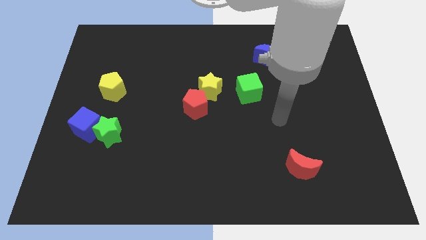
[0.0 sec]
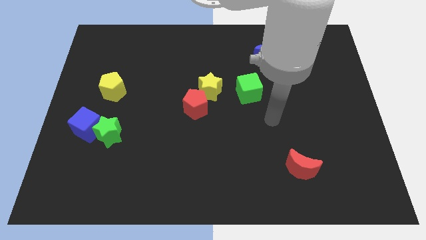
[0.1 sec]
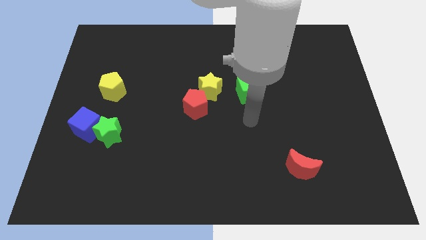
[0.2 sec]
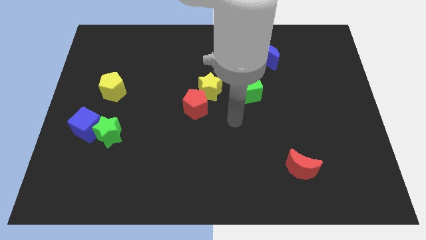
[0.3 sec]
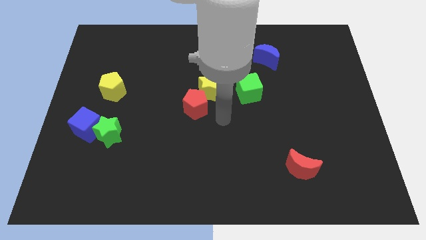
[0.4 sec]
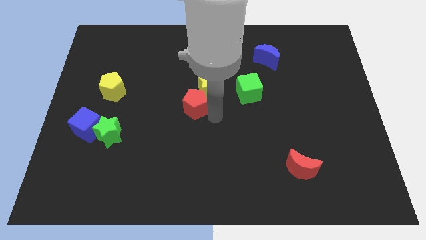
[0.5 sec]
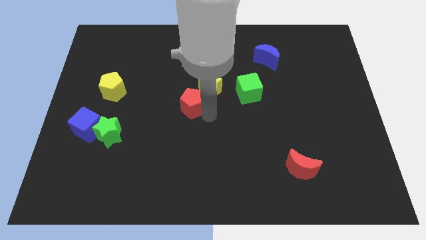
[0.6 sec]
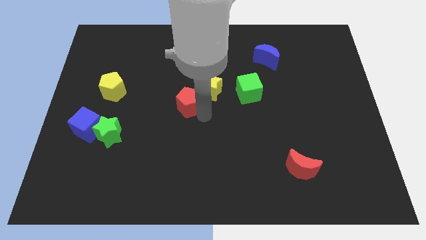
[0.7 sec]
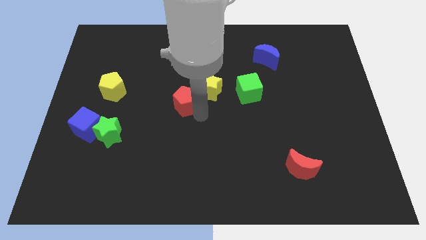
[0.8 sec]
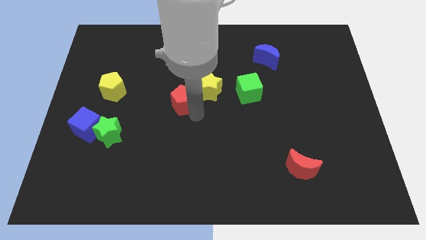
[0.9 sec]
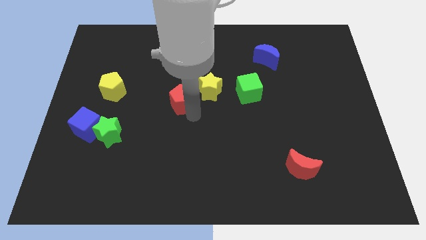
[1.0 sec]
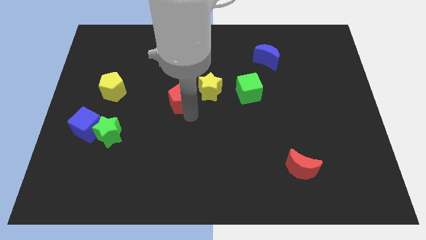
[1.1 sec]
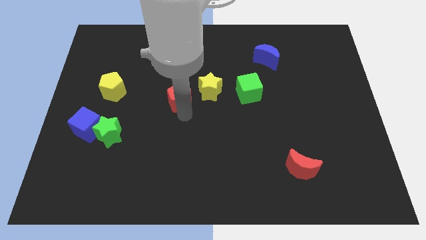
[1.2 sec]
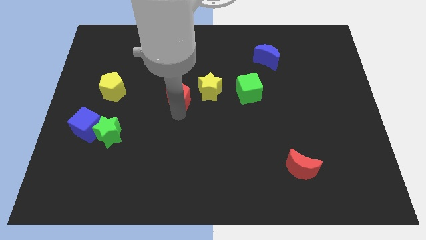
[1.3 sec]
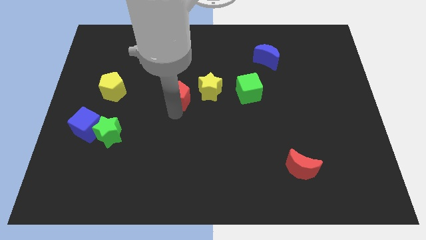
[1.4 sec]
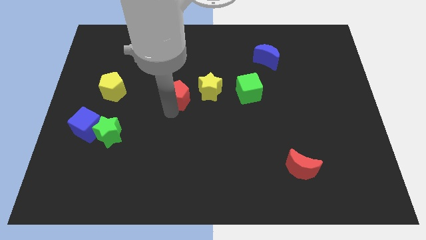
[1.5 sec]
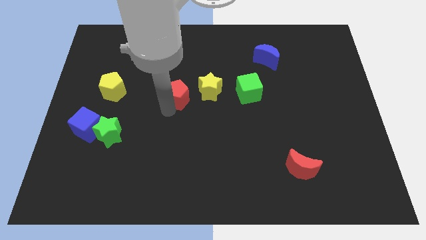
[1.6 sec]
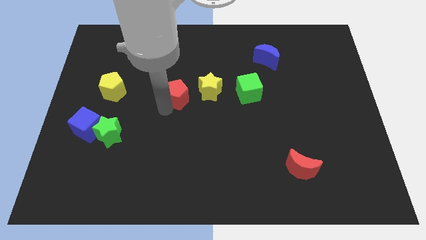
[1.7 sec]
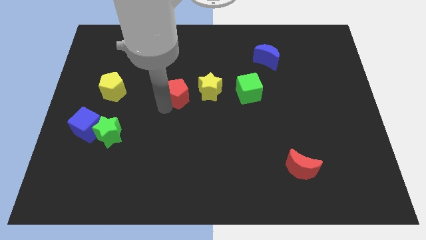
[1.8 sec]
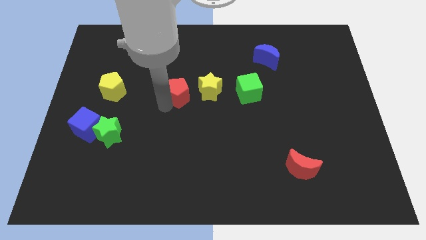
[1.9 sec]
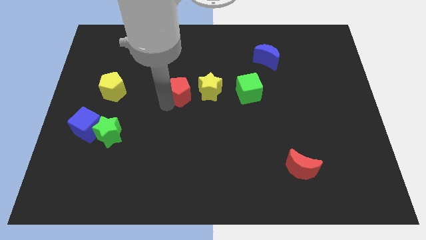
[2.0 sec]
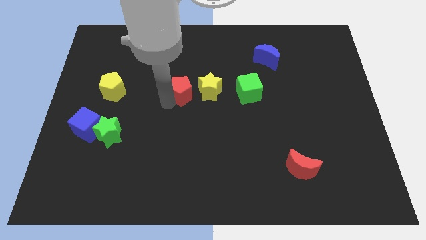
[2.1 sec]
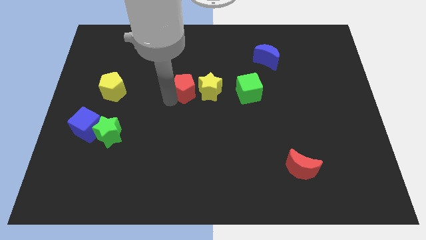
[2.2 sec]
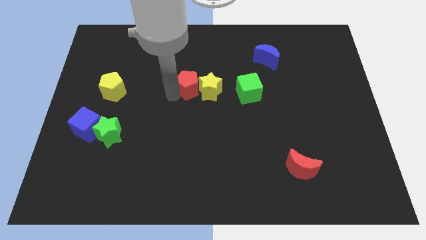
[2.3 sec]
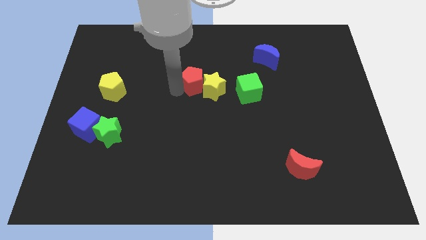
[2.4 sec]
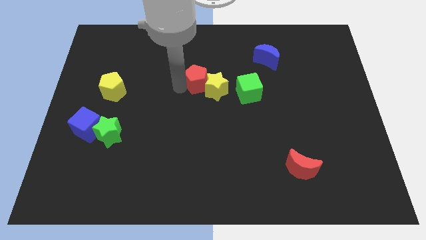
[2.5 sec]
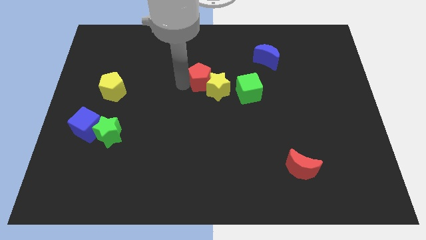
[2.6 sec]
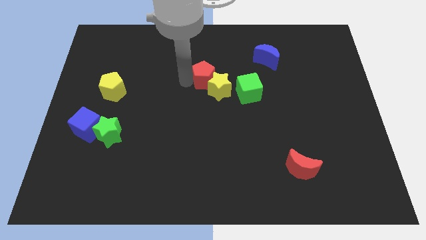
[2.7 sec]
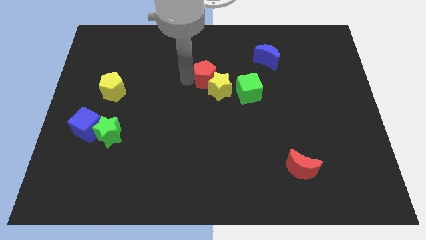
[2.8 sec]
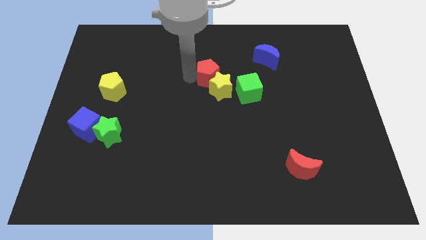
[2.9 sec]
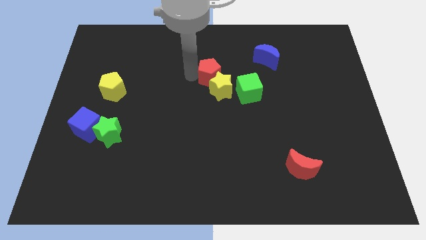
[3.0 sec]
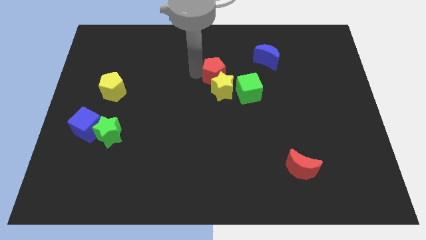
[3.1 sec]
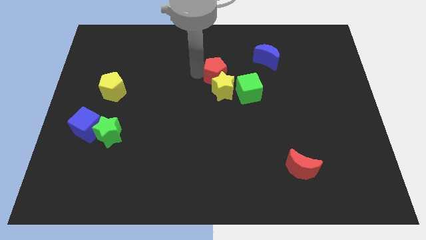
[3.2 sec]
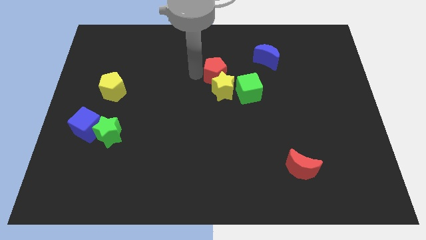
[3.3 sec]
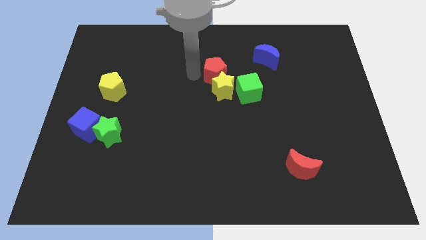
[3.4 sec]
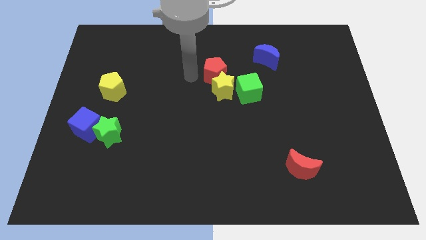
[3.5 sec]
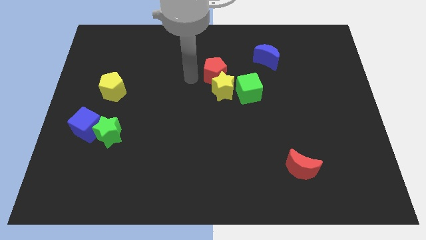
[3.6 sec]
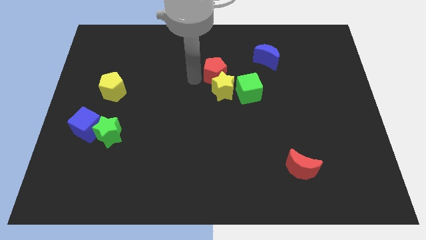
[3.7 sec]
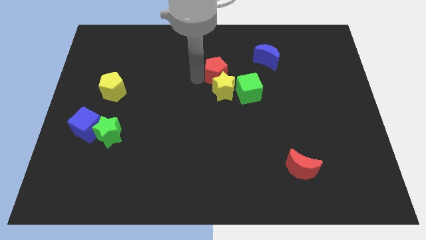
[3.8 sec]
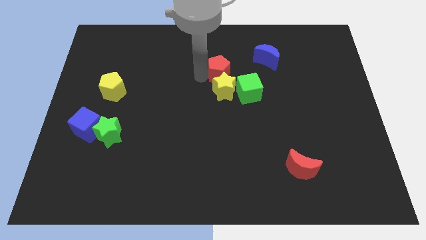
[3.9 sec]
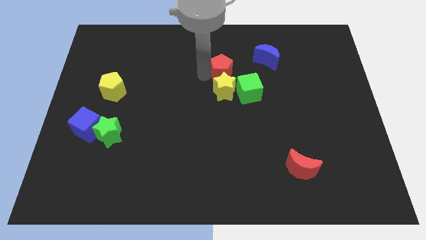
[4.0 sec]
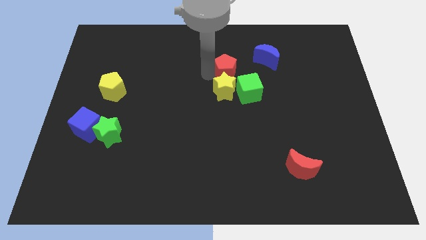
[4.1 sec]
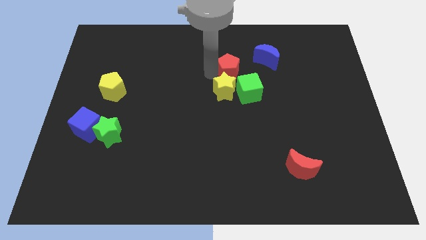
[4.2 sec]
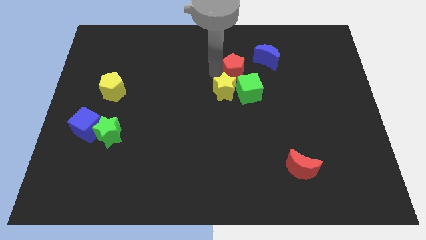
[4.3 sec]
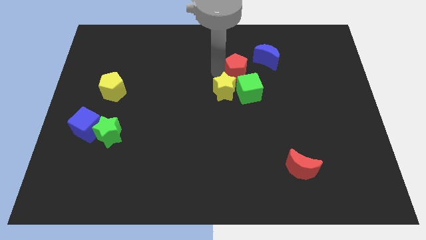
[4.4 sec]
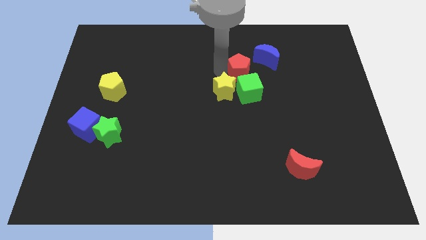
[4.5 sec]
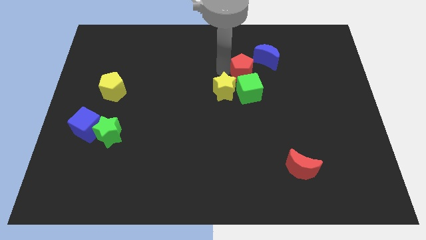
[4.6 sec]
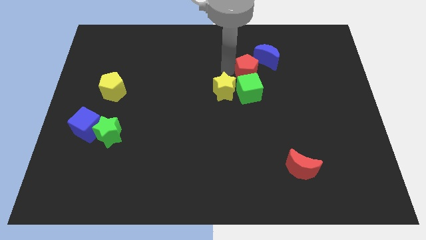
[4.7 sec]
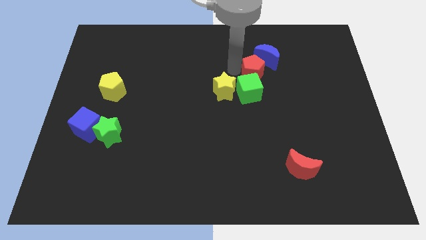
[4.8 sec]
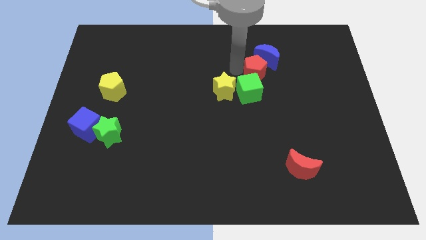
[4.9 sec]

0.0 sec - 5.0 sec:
move the red pentagon to the blue moon

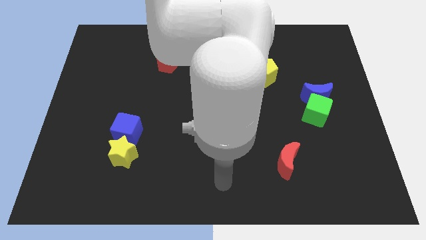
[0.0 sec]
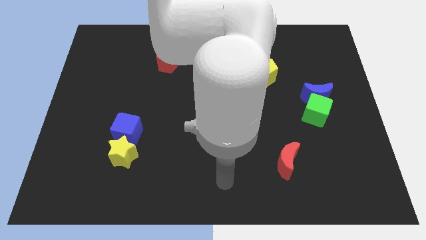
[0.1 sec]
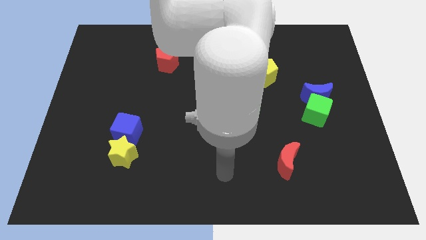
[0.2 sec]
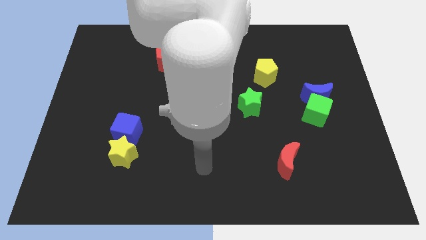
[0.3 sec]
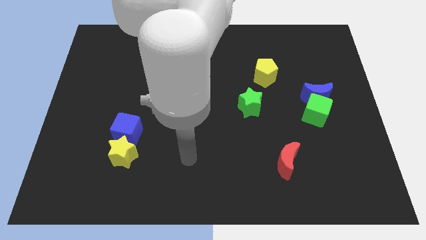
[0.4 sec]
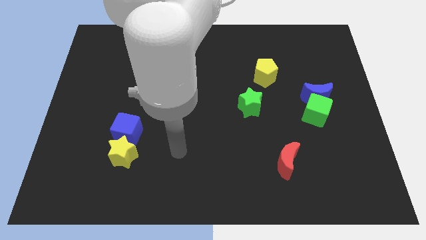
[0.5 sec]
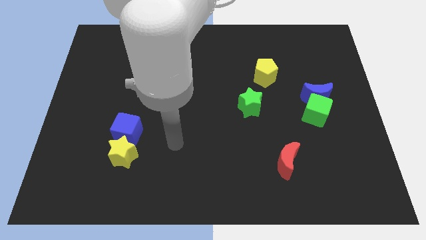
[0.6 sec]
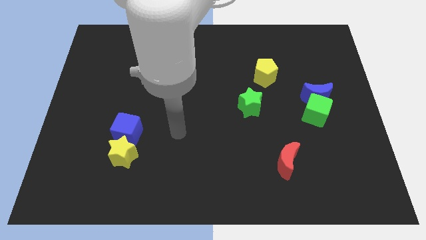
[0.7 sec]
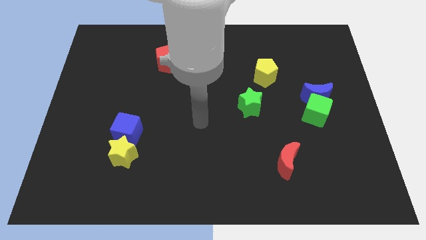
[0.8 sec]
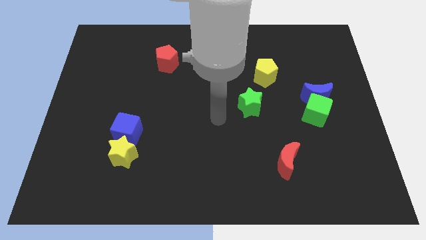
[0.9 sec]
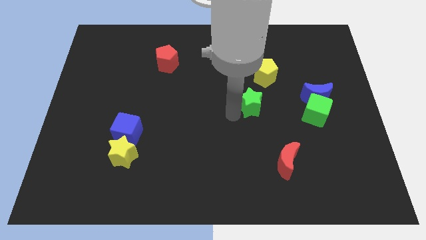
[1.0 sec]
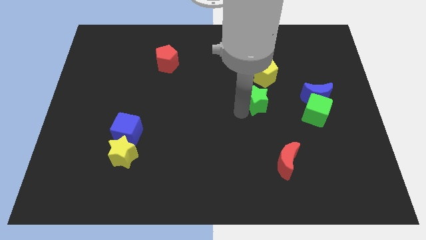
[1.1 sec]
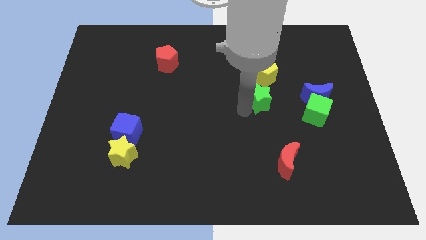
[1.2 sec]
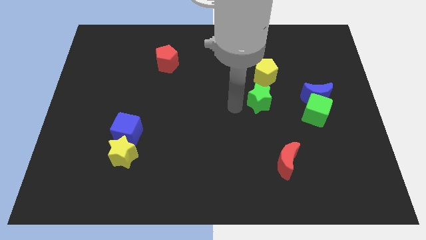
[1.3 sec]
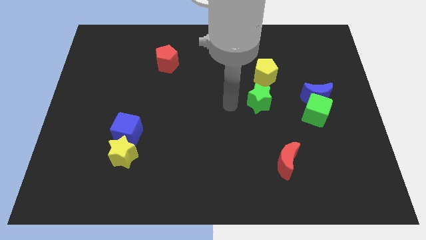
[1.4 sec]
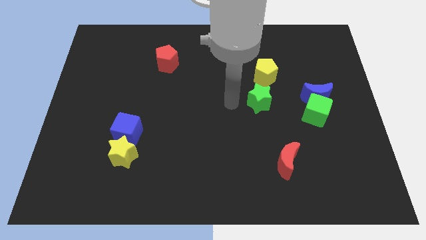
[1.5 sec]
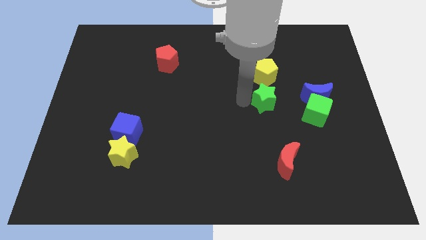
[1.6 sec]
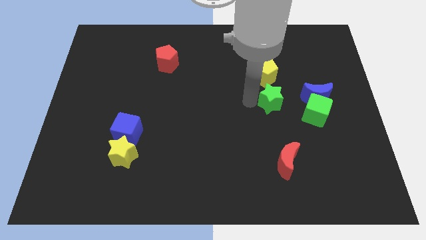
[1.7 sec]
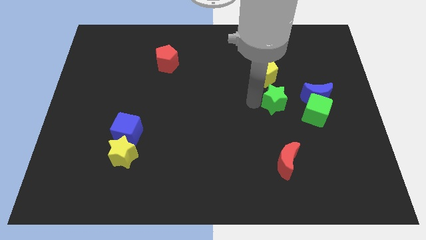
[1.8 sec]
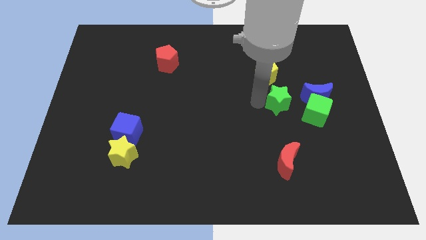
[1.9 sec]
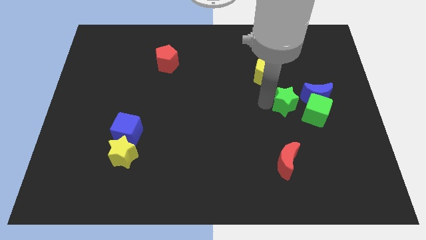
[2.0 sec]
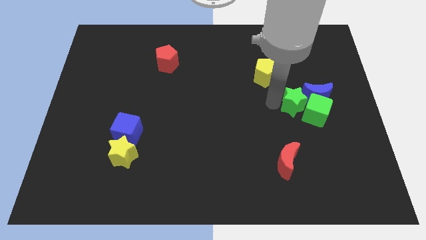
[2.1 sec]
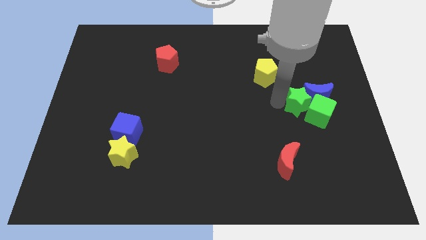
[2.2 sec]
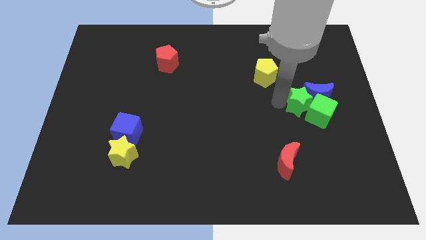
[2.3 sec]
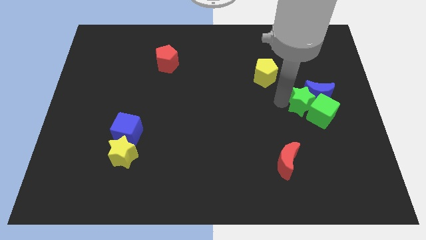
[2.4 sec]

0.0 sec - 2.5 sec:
slide the green star towards the blue moon

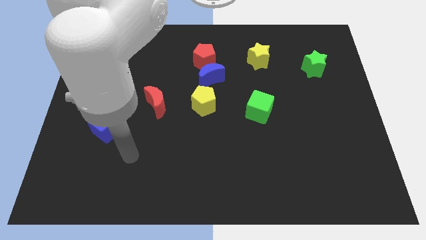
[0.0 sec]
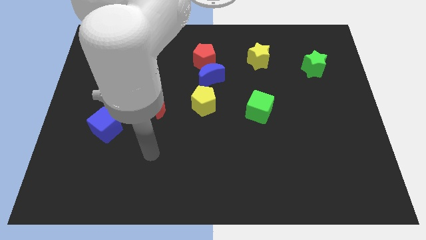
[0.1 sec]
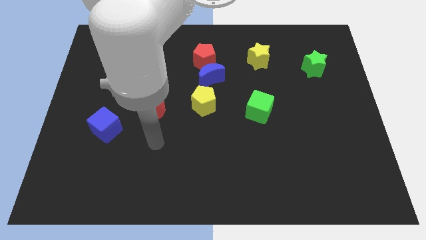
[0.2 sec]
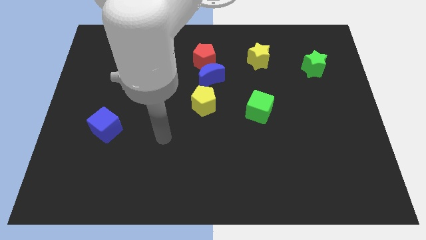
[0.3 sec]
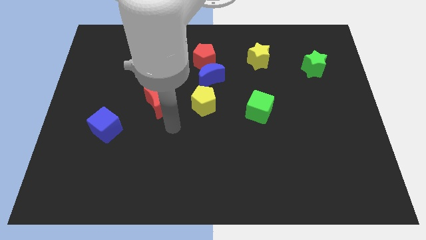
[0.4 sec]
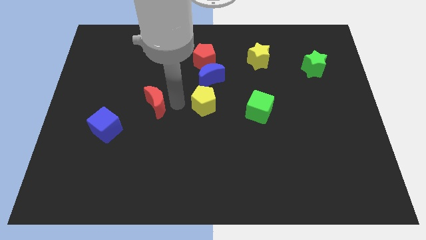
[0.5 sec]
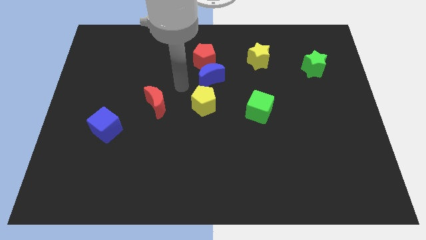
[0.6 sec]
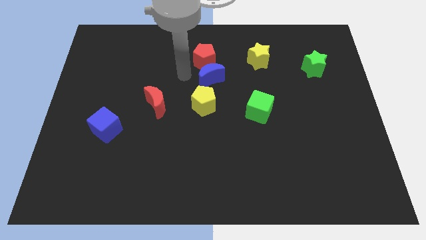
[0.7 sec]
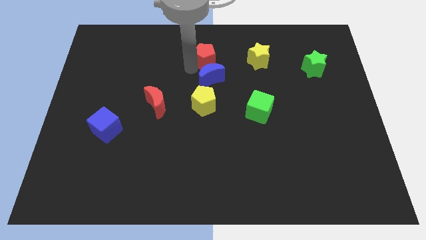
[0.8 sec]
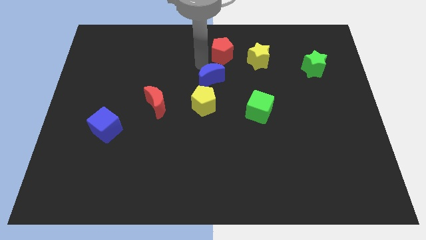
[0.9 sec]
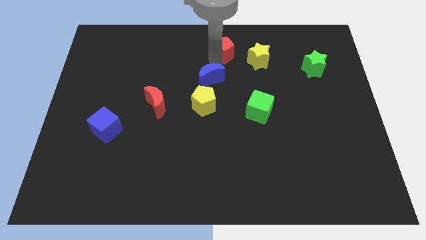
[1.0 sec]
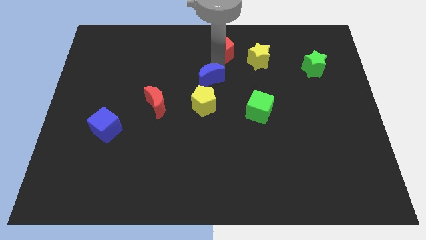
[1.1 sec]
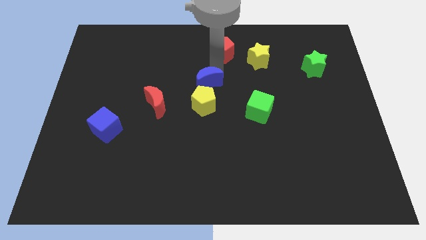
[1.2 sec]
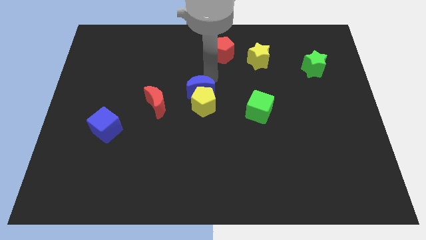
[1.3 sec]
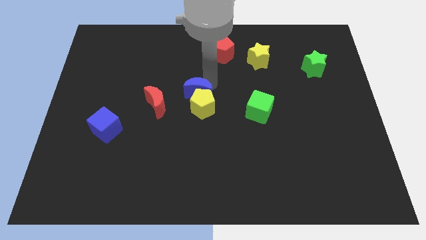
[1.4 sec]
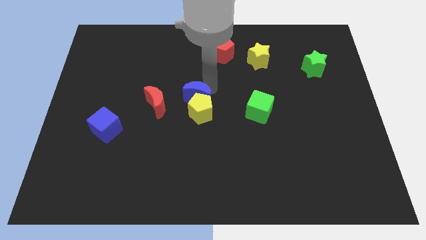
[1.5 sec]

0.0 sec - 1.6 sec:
move the blue moon towards the yellow pentagon
